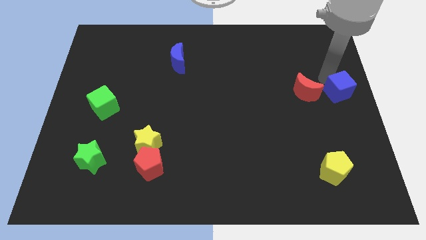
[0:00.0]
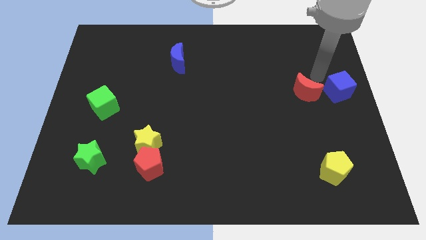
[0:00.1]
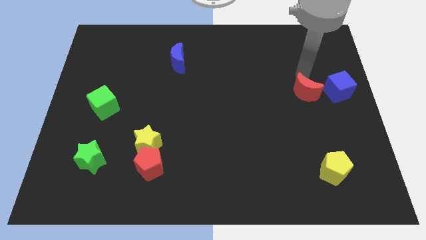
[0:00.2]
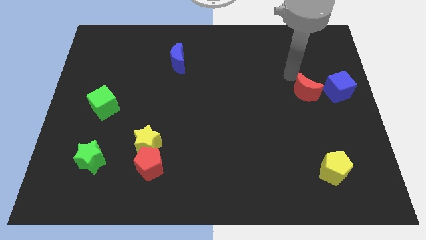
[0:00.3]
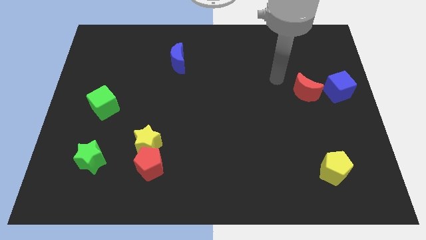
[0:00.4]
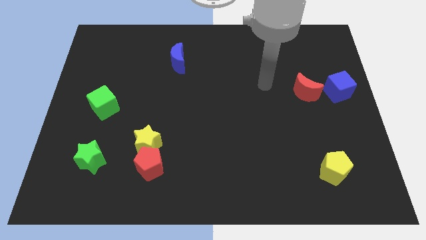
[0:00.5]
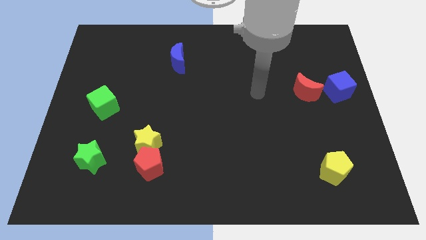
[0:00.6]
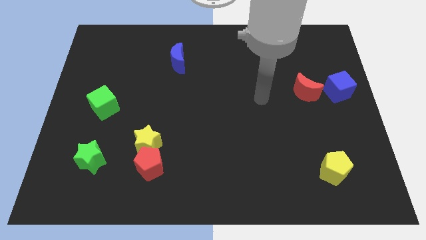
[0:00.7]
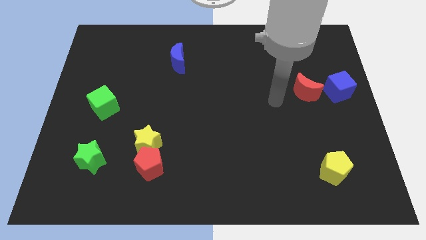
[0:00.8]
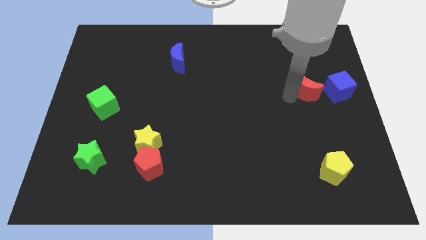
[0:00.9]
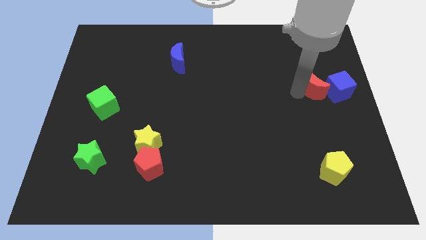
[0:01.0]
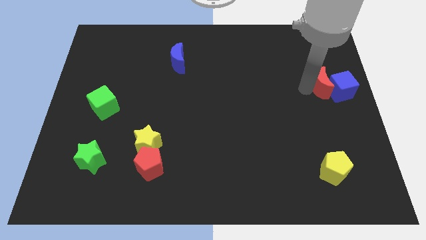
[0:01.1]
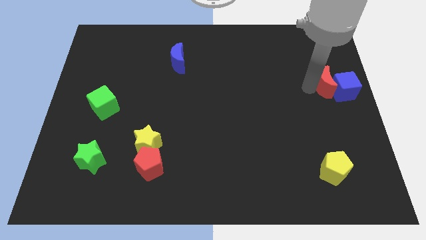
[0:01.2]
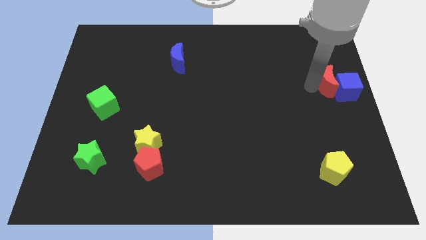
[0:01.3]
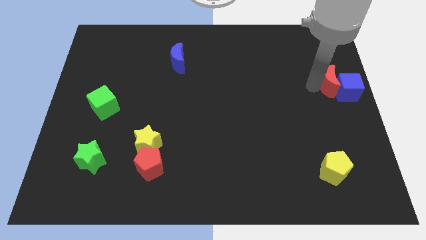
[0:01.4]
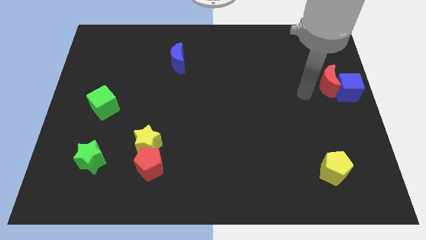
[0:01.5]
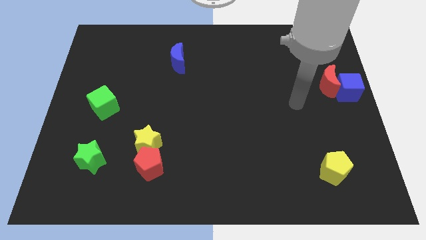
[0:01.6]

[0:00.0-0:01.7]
push red crescent in to blue cube

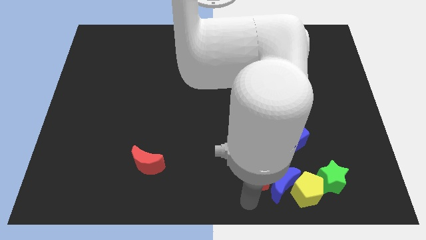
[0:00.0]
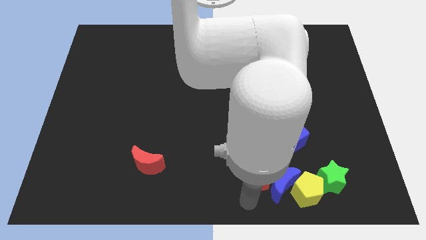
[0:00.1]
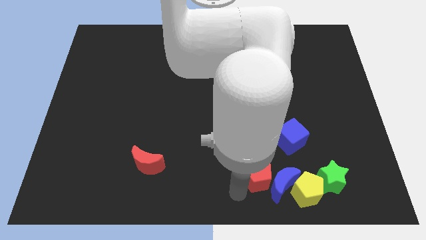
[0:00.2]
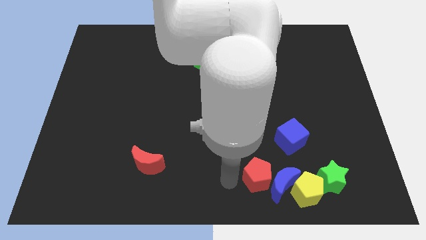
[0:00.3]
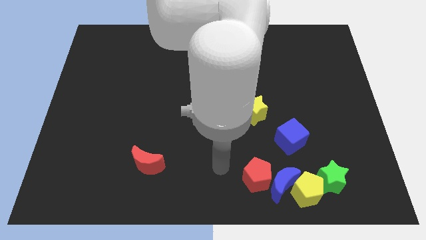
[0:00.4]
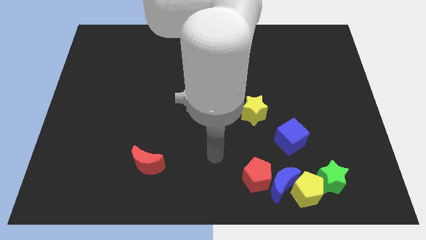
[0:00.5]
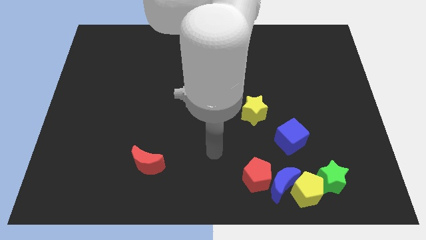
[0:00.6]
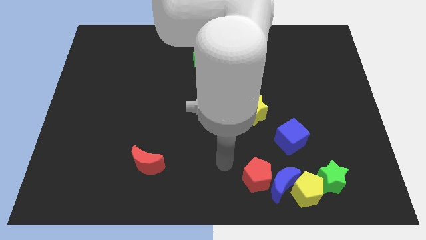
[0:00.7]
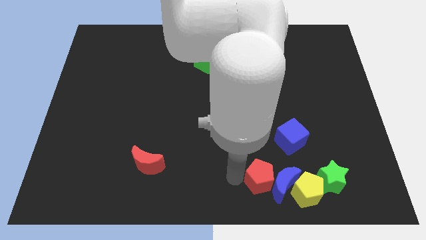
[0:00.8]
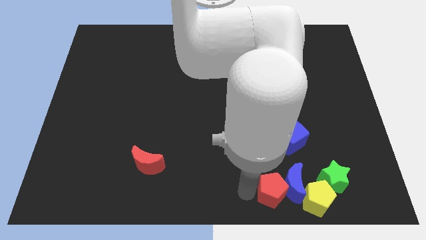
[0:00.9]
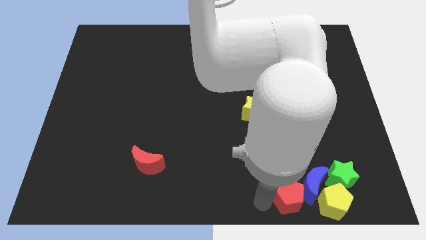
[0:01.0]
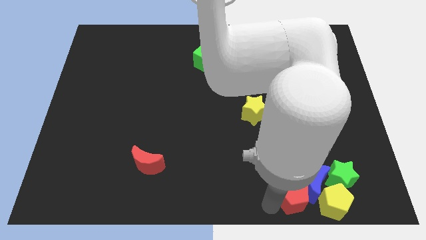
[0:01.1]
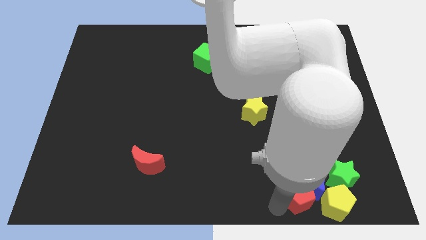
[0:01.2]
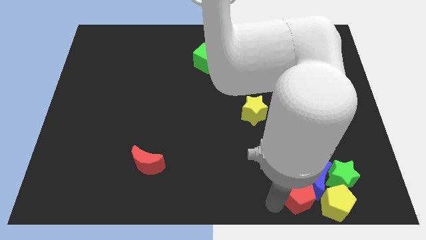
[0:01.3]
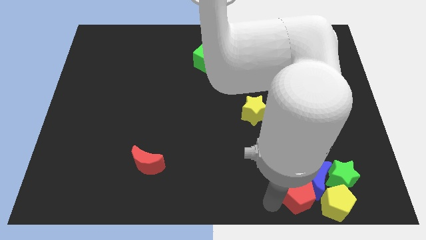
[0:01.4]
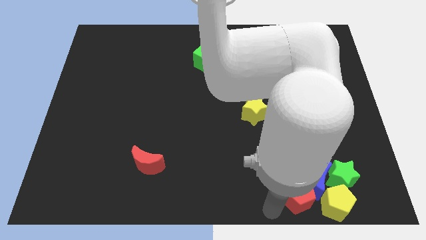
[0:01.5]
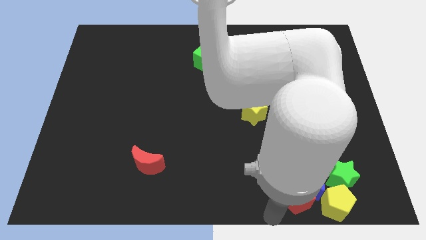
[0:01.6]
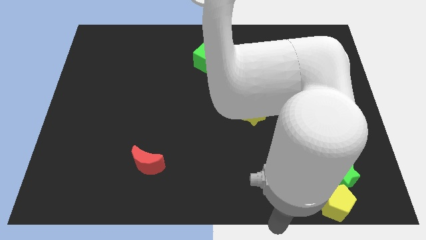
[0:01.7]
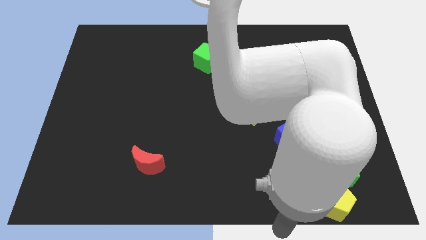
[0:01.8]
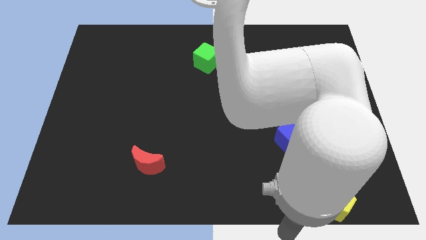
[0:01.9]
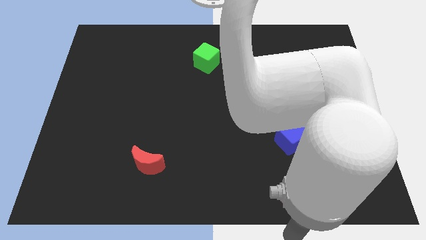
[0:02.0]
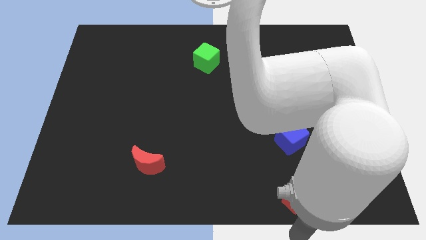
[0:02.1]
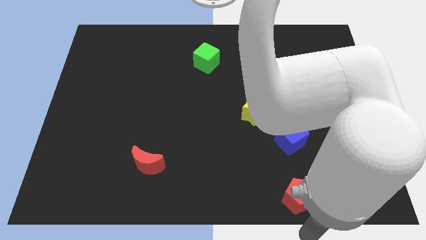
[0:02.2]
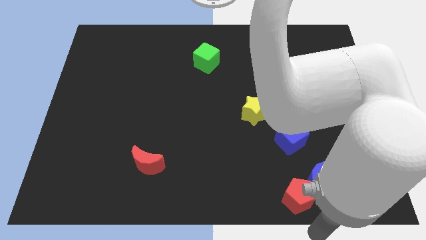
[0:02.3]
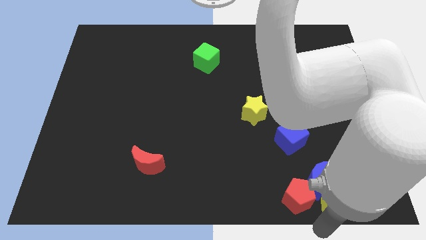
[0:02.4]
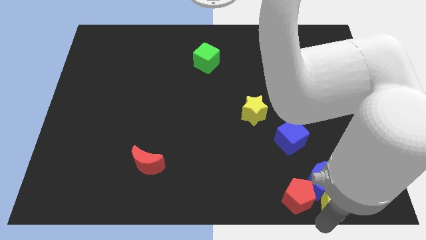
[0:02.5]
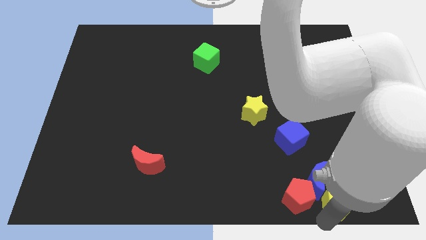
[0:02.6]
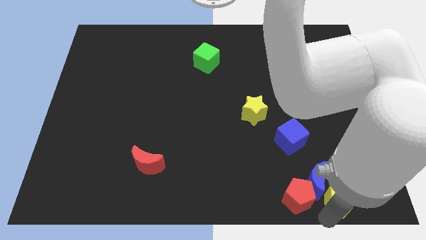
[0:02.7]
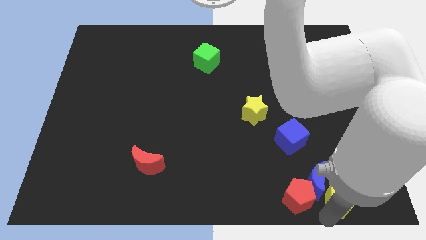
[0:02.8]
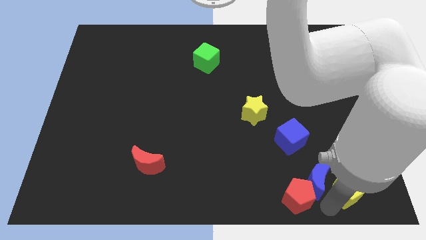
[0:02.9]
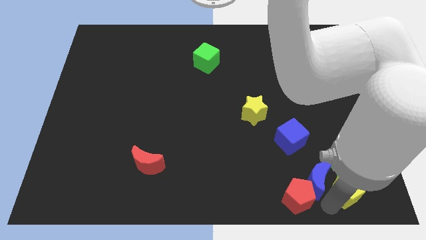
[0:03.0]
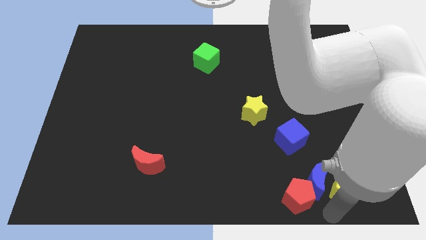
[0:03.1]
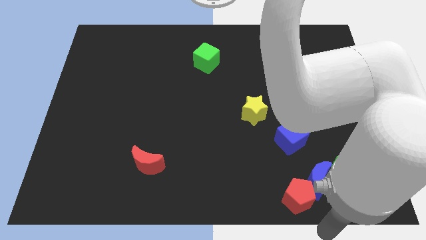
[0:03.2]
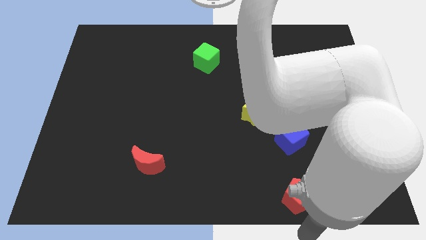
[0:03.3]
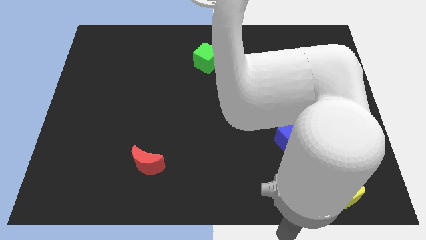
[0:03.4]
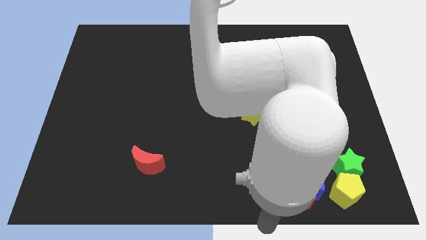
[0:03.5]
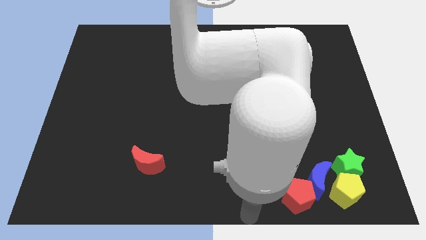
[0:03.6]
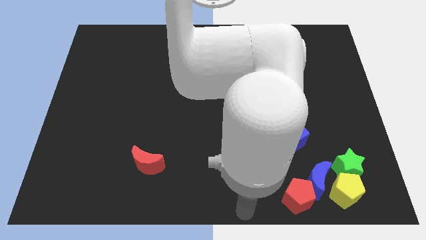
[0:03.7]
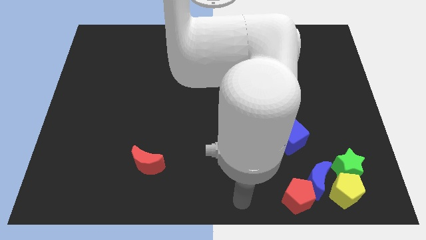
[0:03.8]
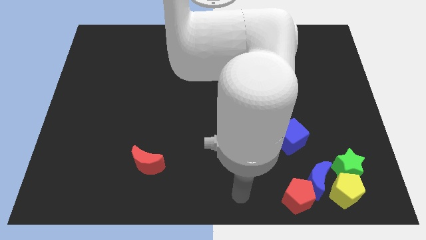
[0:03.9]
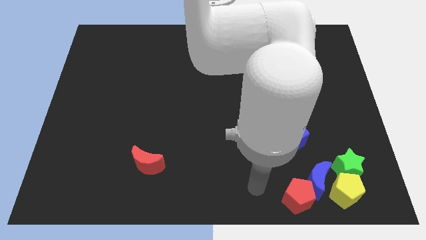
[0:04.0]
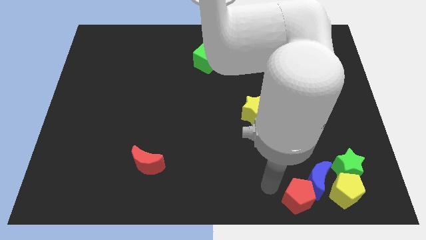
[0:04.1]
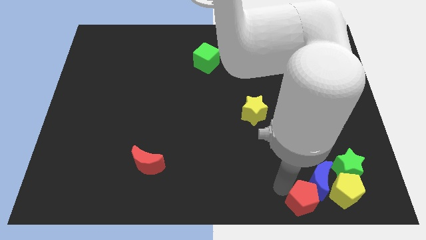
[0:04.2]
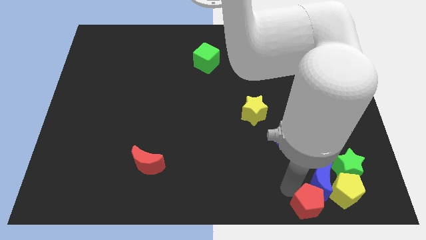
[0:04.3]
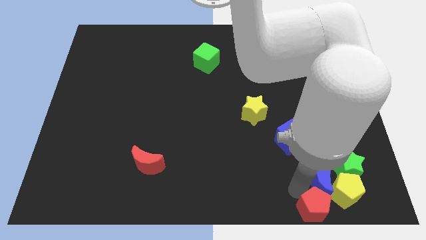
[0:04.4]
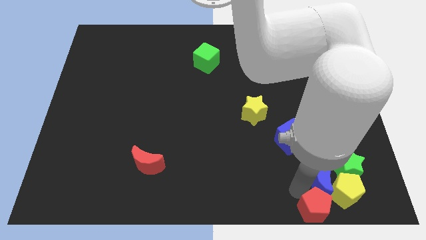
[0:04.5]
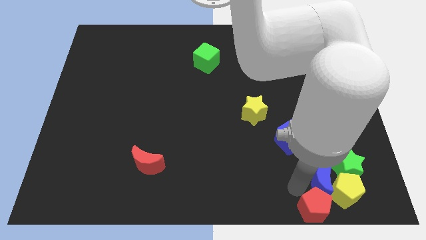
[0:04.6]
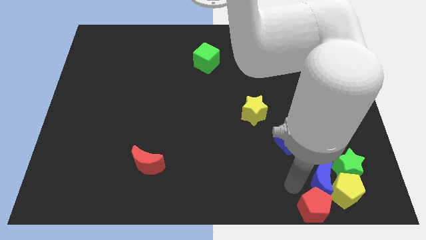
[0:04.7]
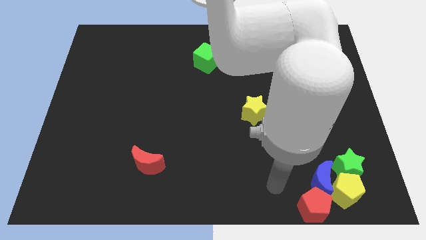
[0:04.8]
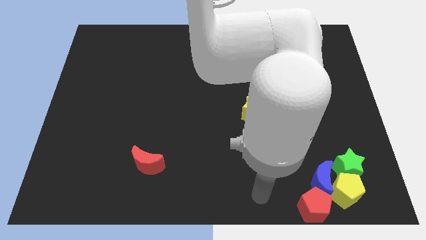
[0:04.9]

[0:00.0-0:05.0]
push a group of blocks to the bottom right side of the board

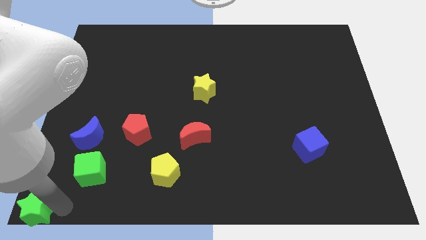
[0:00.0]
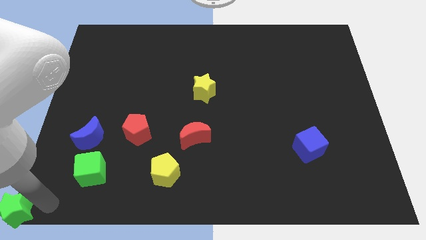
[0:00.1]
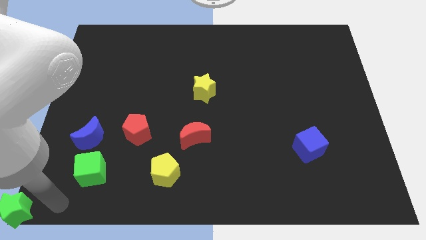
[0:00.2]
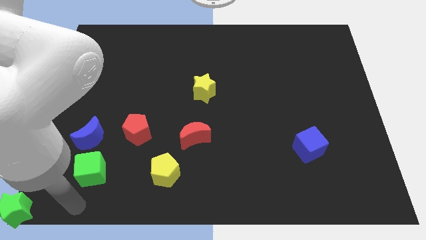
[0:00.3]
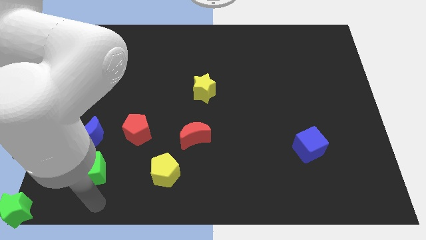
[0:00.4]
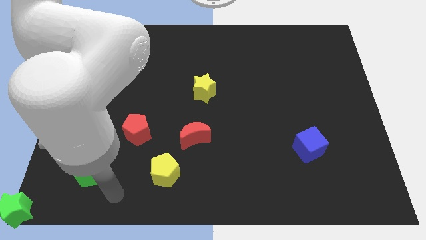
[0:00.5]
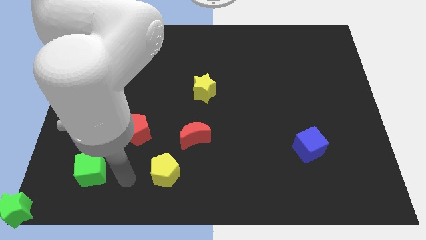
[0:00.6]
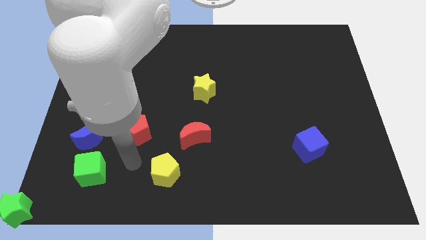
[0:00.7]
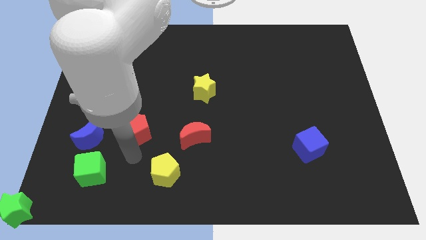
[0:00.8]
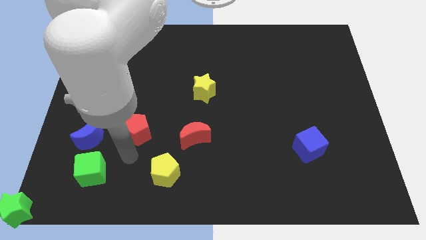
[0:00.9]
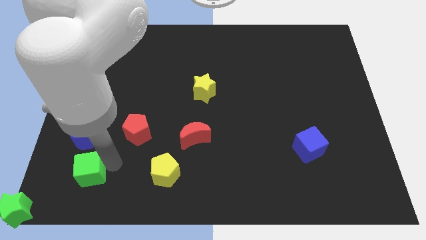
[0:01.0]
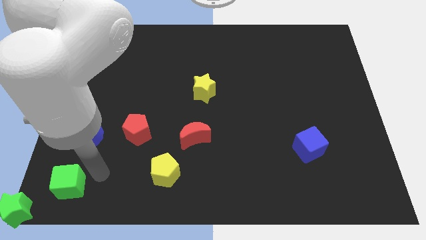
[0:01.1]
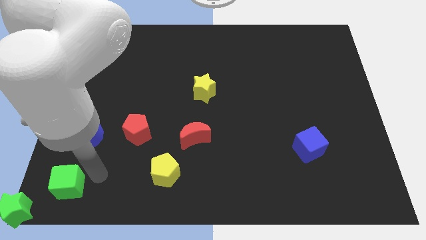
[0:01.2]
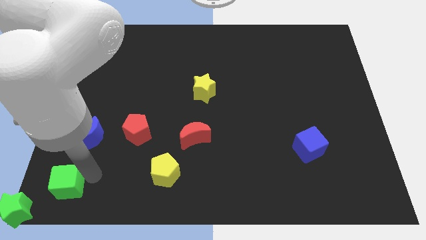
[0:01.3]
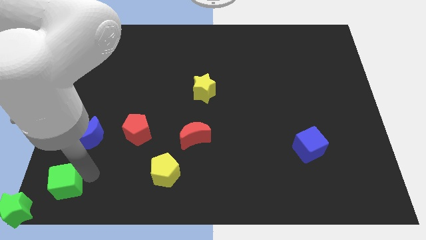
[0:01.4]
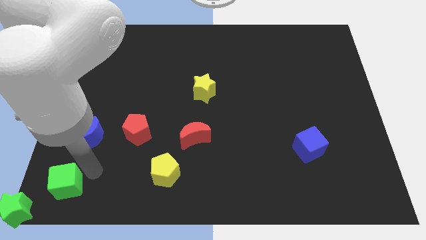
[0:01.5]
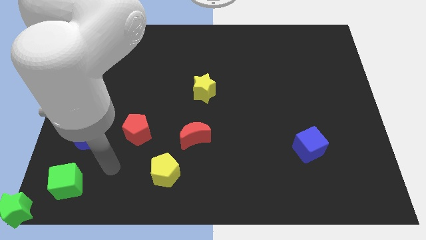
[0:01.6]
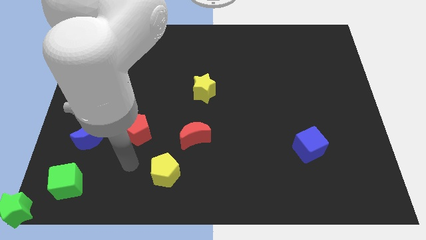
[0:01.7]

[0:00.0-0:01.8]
push the green cube towards the green star

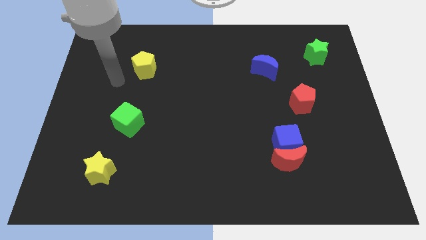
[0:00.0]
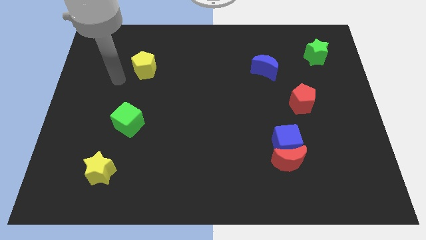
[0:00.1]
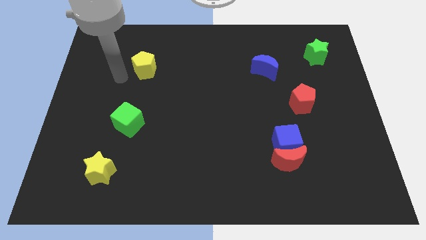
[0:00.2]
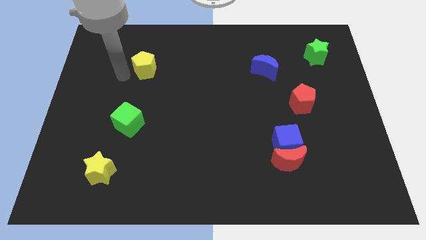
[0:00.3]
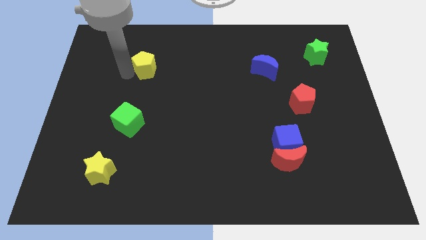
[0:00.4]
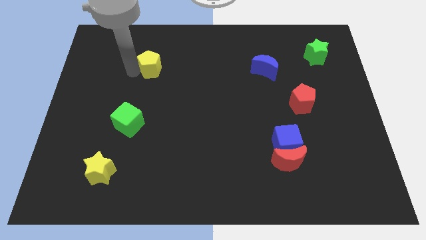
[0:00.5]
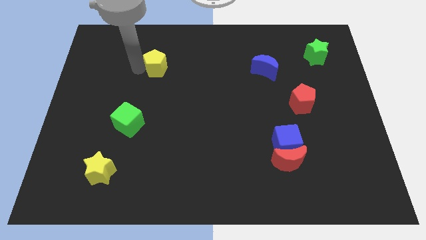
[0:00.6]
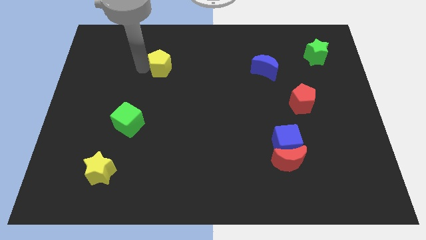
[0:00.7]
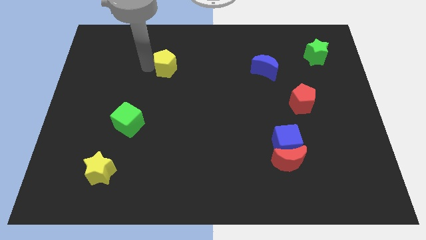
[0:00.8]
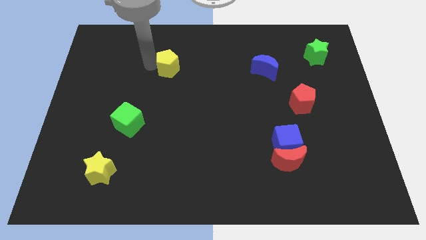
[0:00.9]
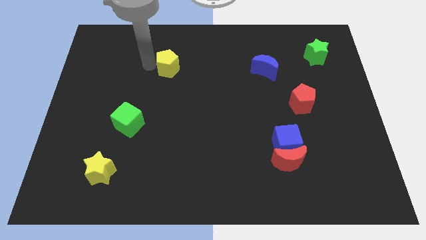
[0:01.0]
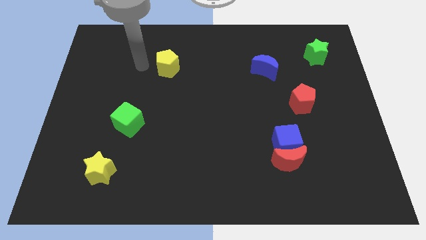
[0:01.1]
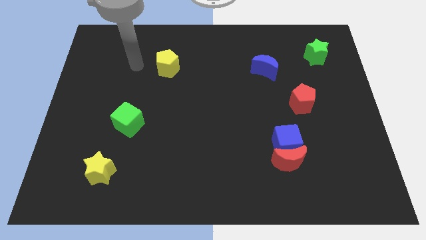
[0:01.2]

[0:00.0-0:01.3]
slightly move the yellow pentagon towards the right side of the board
